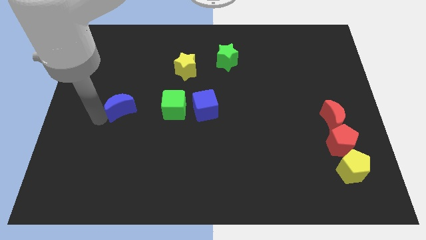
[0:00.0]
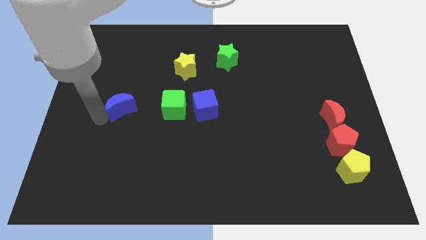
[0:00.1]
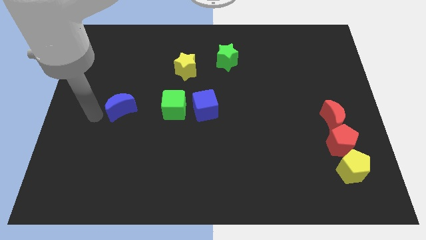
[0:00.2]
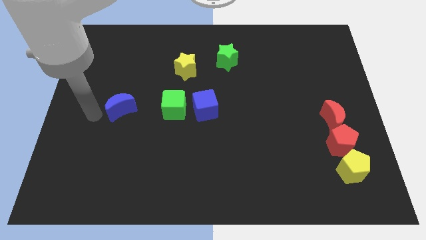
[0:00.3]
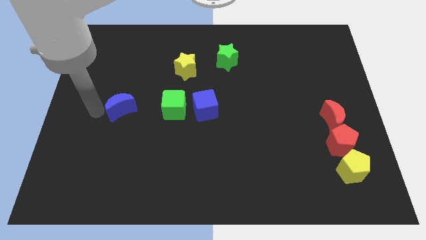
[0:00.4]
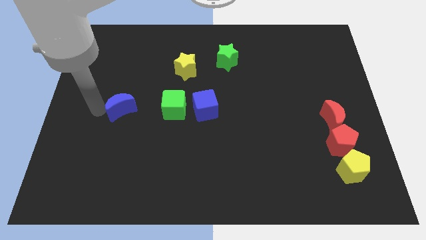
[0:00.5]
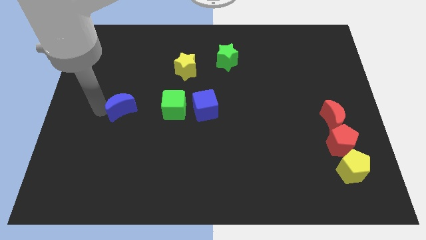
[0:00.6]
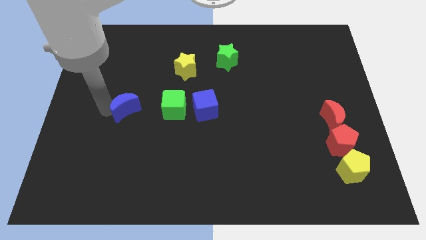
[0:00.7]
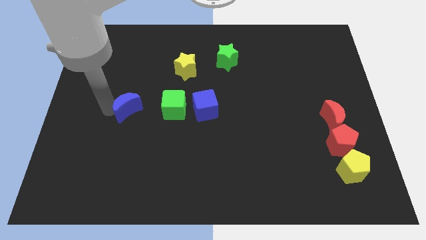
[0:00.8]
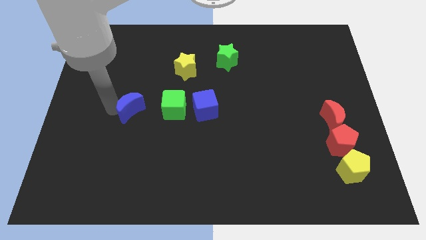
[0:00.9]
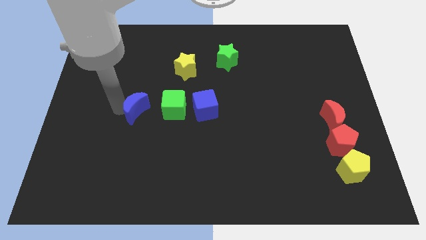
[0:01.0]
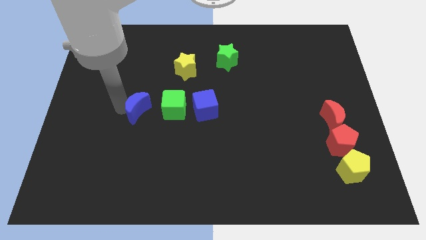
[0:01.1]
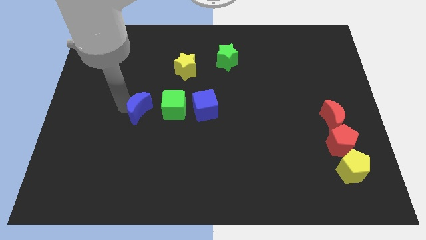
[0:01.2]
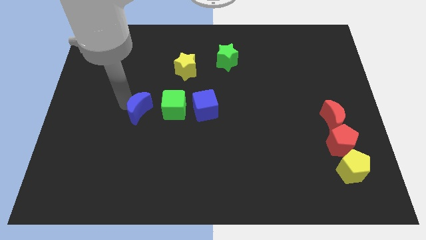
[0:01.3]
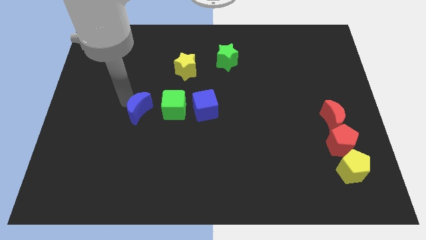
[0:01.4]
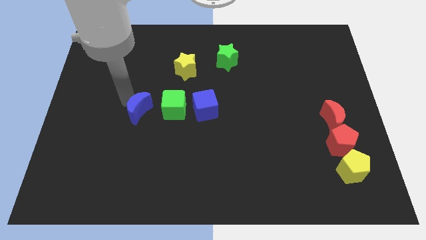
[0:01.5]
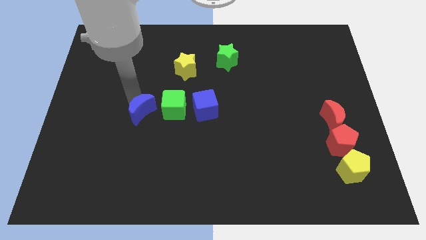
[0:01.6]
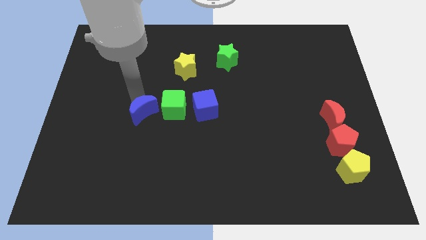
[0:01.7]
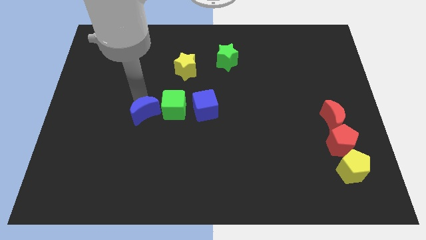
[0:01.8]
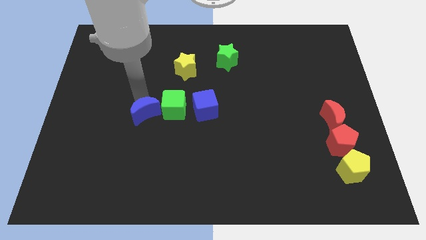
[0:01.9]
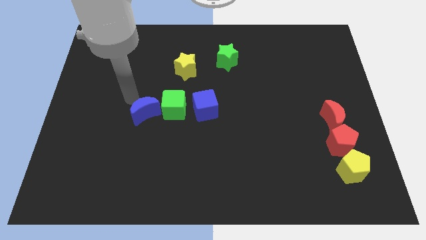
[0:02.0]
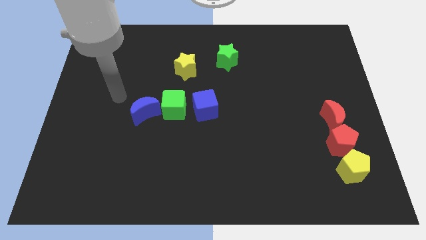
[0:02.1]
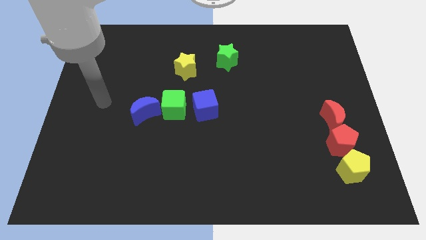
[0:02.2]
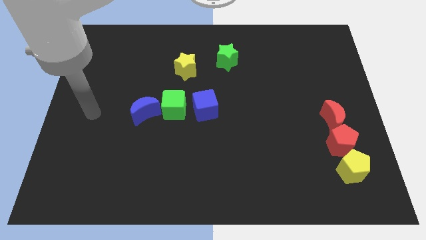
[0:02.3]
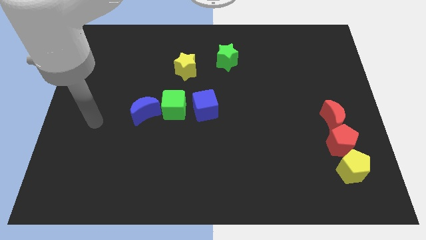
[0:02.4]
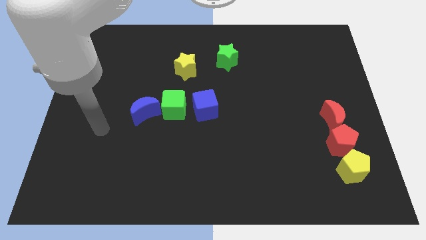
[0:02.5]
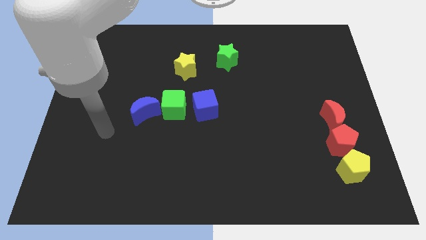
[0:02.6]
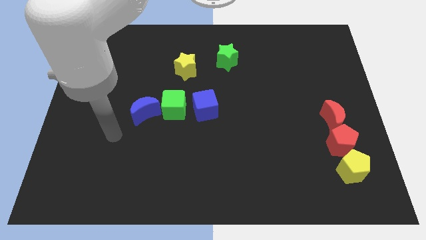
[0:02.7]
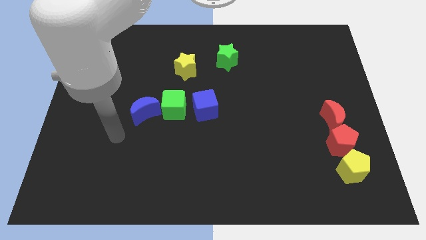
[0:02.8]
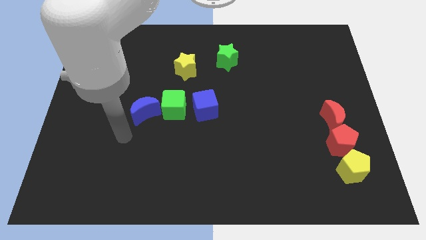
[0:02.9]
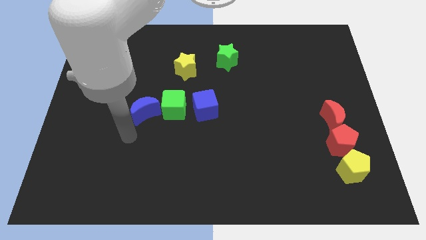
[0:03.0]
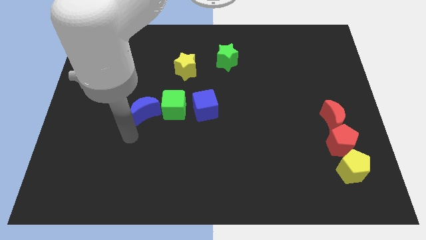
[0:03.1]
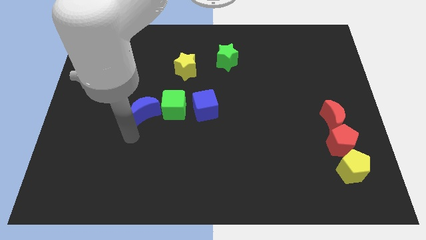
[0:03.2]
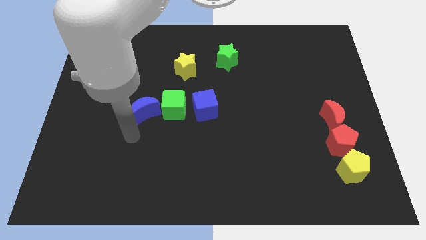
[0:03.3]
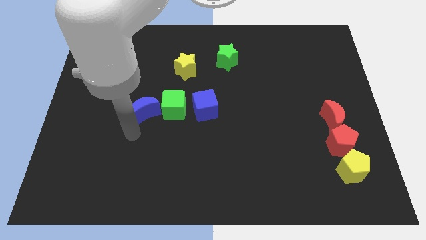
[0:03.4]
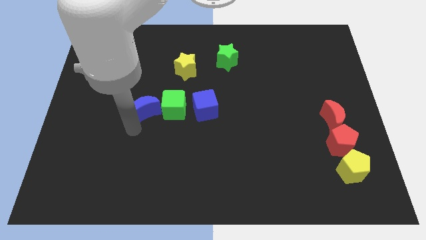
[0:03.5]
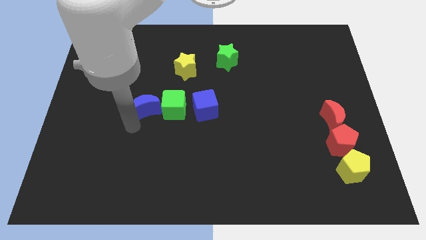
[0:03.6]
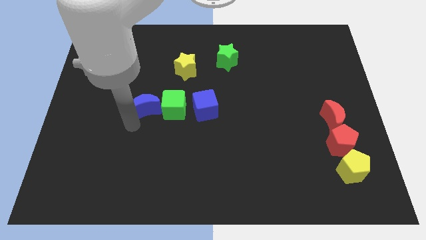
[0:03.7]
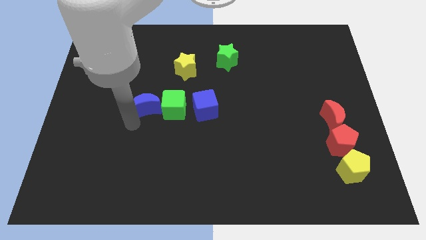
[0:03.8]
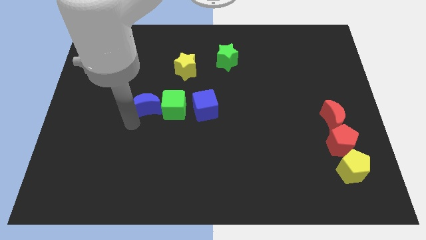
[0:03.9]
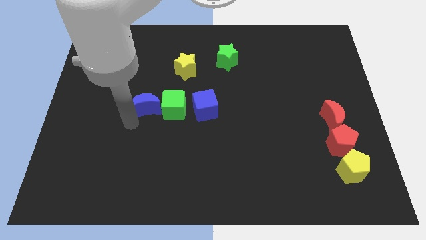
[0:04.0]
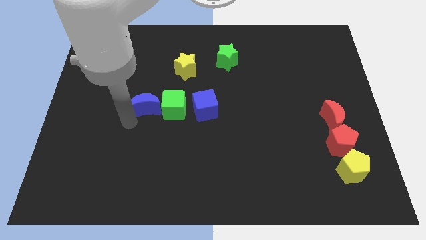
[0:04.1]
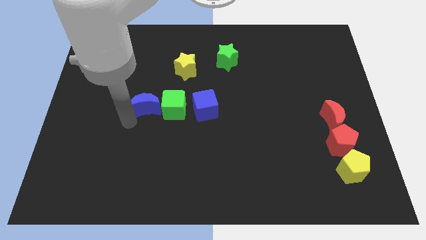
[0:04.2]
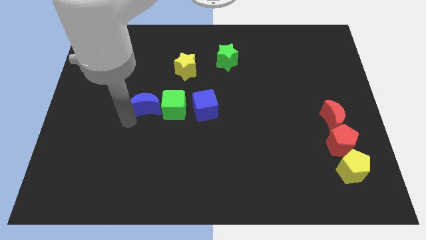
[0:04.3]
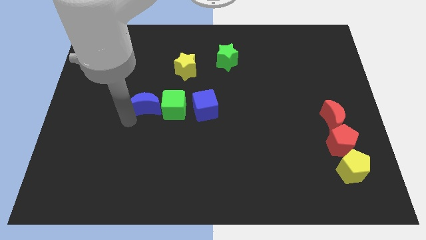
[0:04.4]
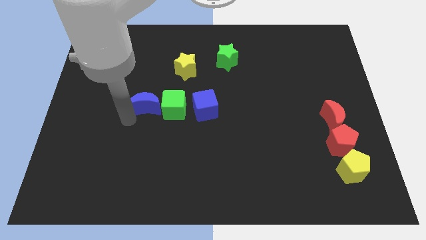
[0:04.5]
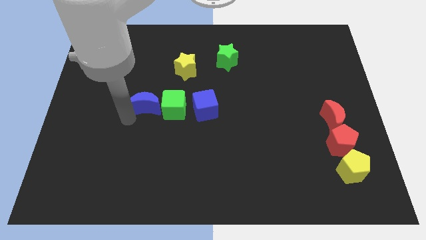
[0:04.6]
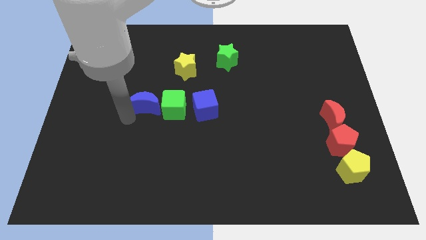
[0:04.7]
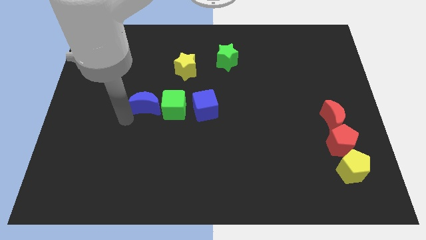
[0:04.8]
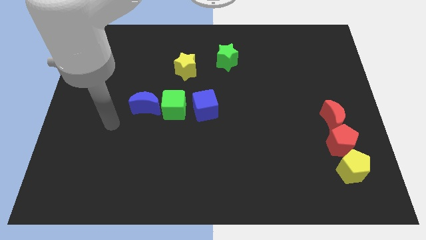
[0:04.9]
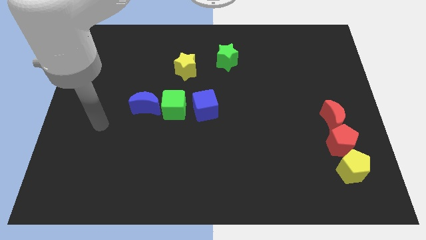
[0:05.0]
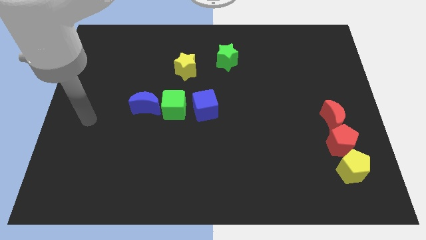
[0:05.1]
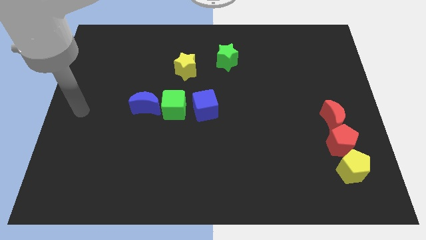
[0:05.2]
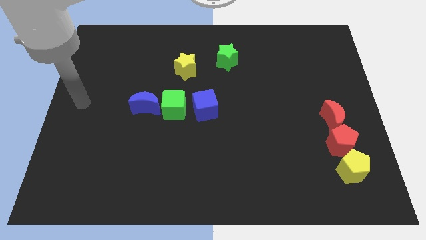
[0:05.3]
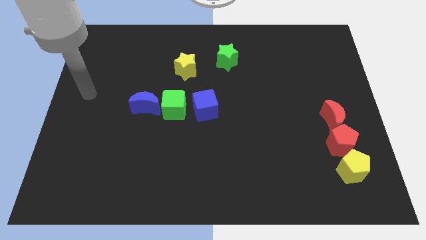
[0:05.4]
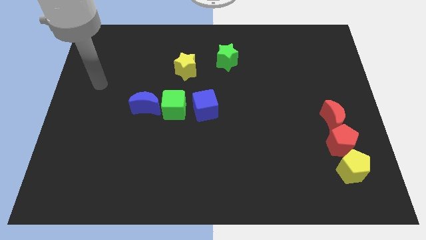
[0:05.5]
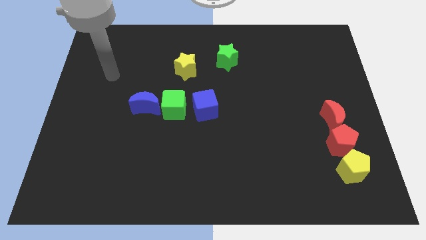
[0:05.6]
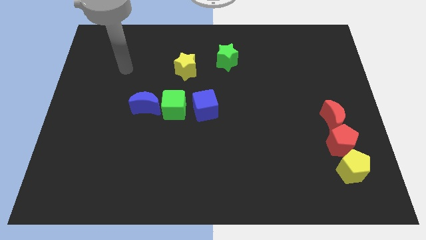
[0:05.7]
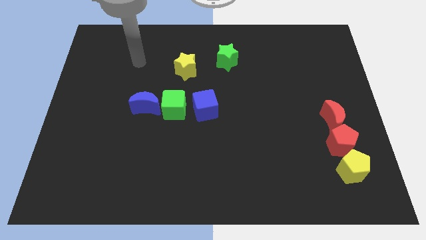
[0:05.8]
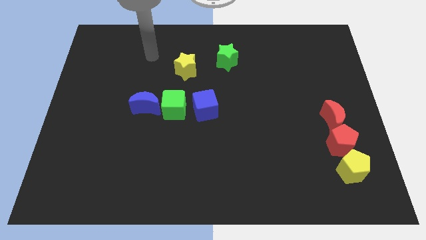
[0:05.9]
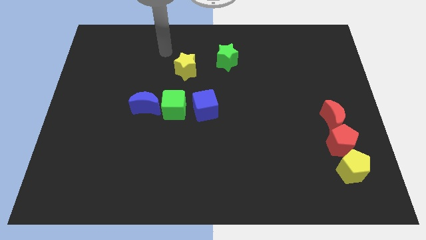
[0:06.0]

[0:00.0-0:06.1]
push the blue moon close to the green cube

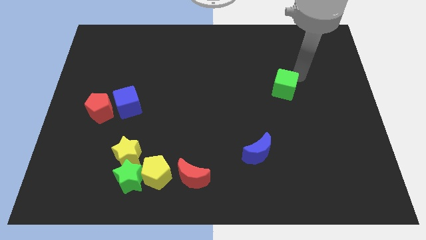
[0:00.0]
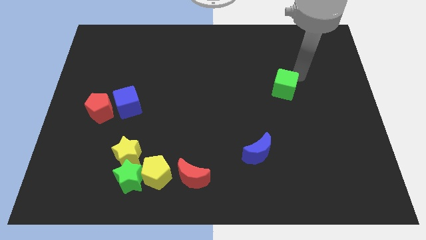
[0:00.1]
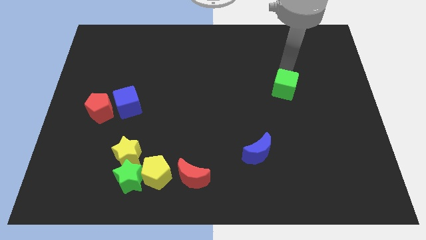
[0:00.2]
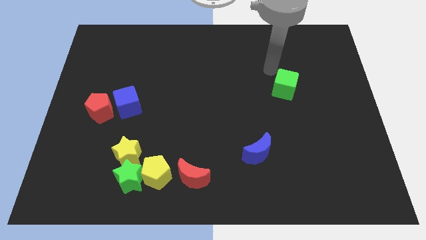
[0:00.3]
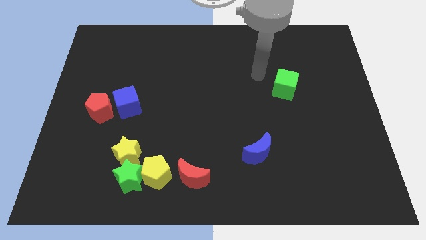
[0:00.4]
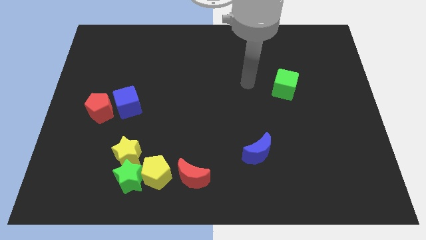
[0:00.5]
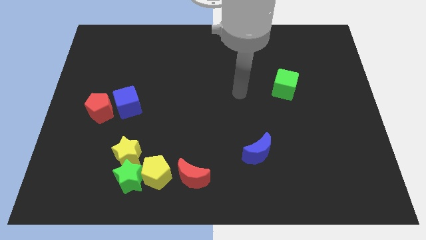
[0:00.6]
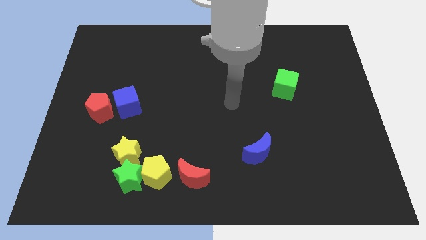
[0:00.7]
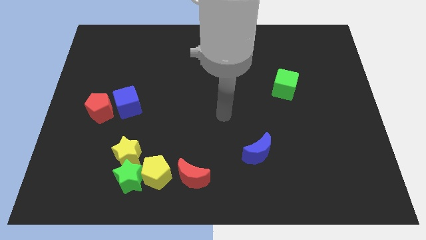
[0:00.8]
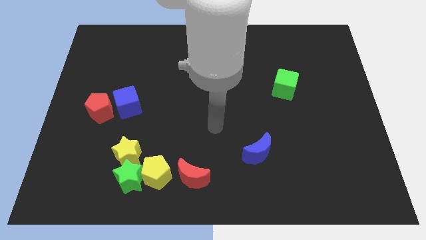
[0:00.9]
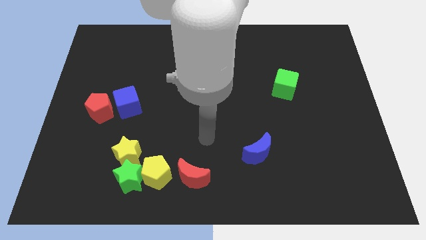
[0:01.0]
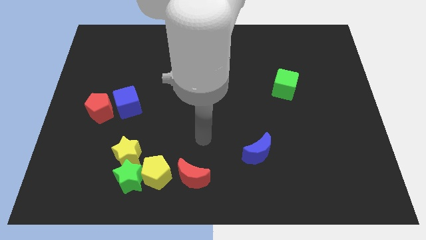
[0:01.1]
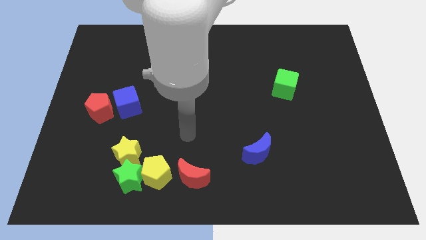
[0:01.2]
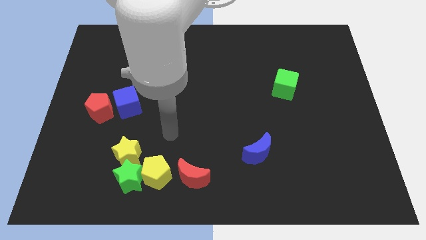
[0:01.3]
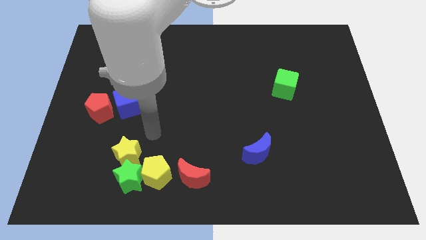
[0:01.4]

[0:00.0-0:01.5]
move your arm away from the green cube

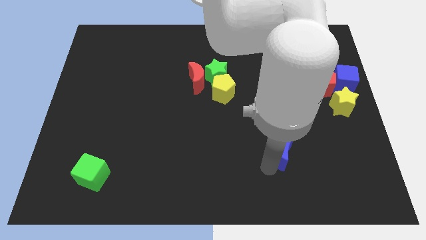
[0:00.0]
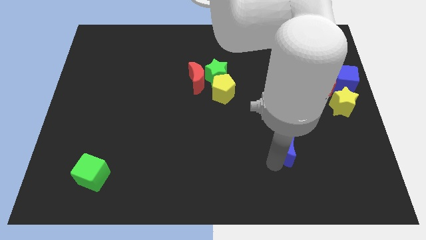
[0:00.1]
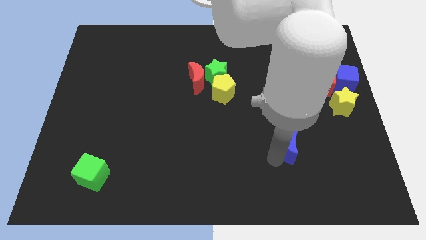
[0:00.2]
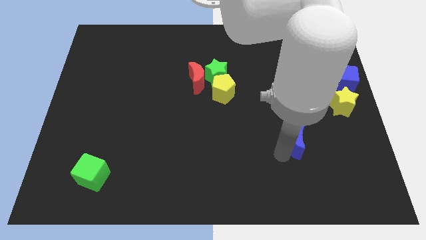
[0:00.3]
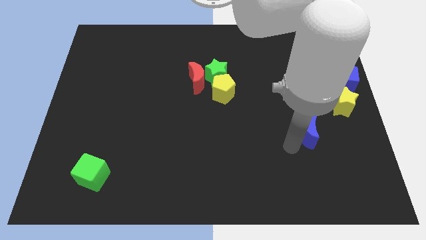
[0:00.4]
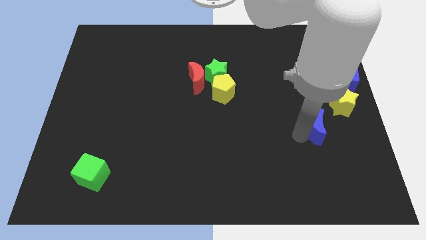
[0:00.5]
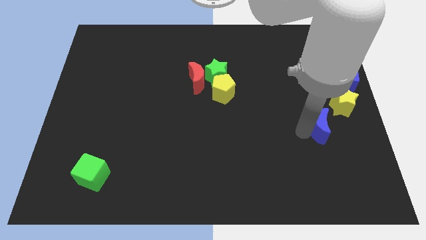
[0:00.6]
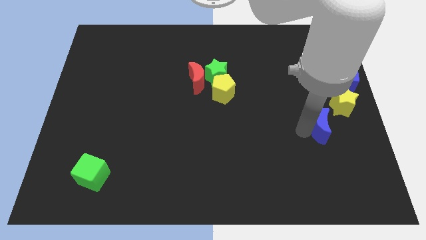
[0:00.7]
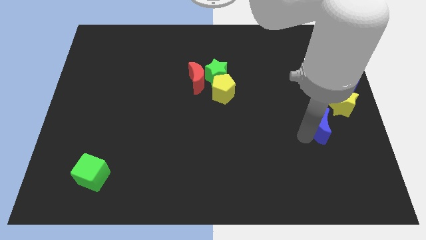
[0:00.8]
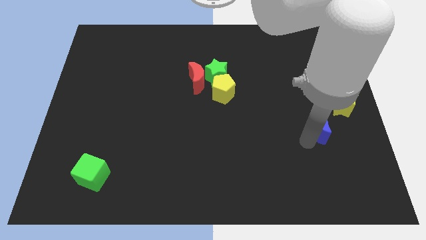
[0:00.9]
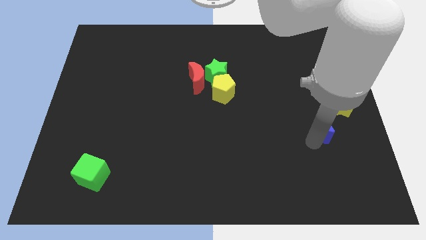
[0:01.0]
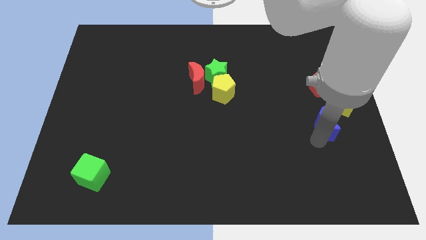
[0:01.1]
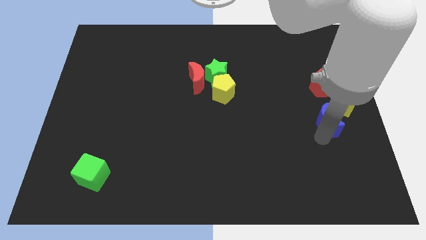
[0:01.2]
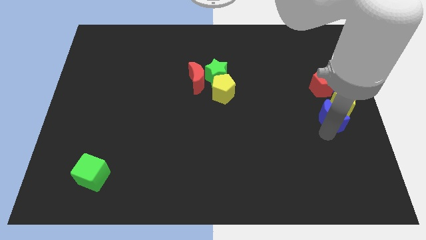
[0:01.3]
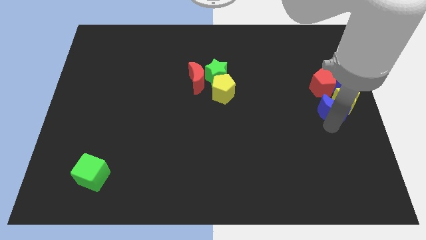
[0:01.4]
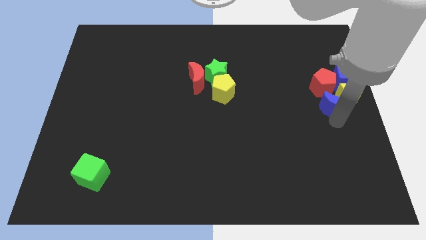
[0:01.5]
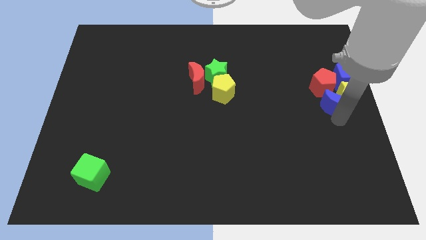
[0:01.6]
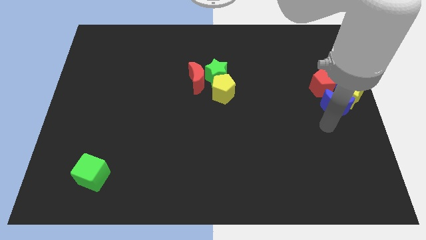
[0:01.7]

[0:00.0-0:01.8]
move the blue moon into the group of blocks
